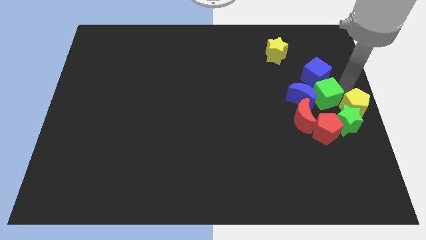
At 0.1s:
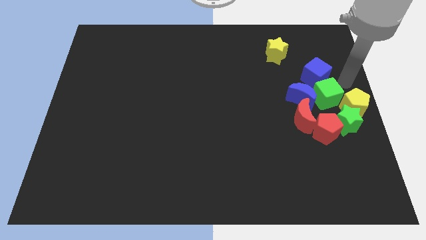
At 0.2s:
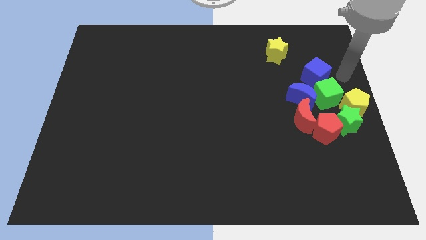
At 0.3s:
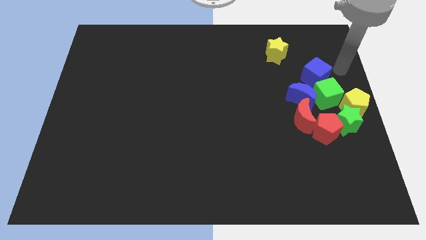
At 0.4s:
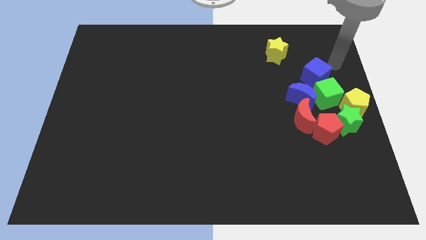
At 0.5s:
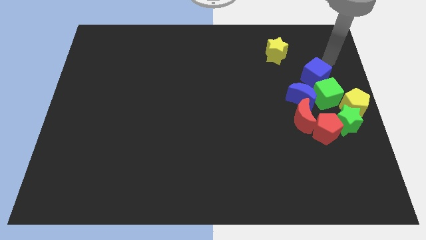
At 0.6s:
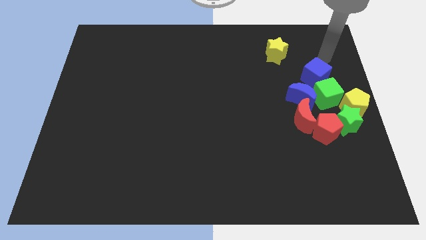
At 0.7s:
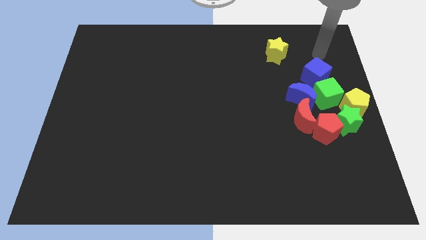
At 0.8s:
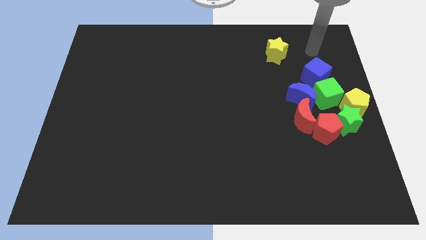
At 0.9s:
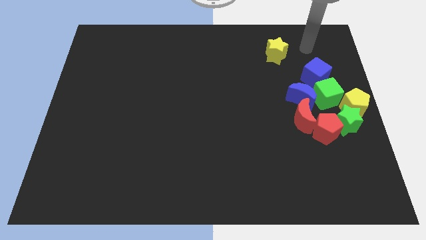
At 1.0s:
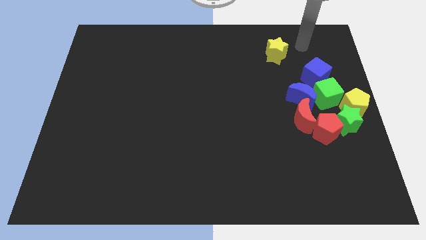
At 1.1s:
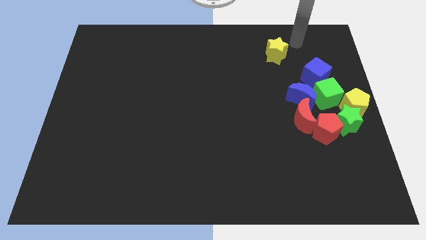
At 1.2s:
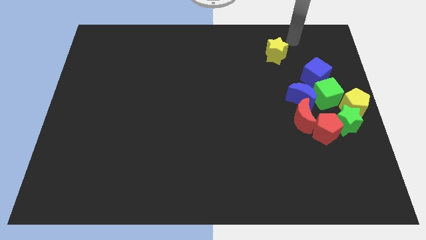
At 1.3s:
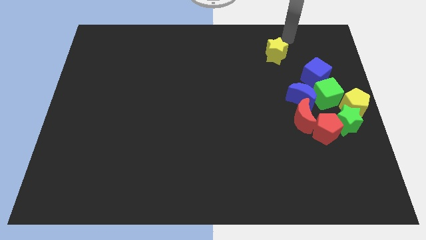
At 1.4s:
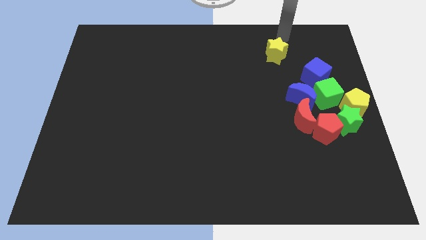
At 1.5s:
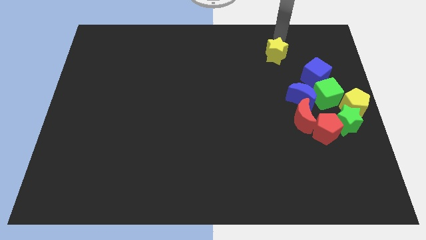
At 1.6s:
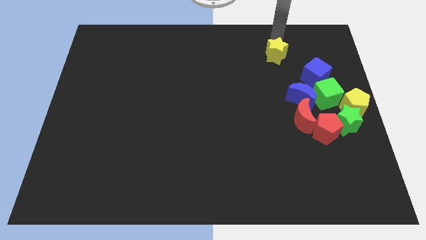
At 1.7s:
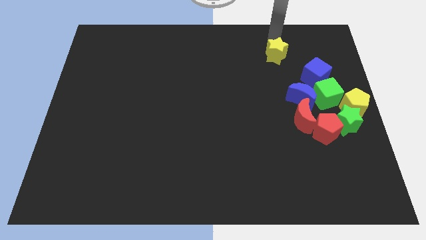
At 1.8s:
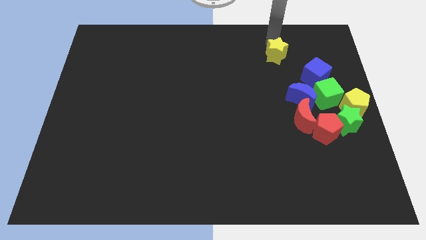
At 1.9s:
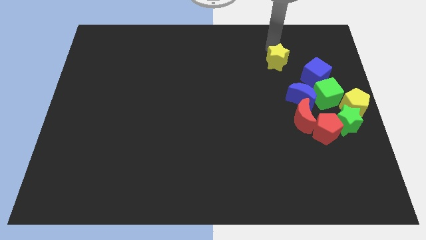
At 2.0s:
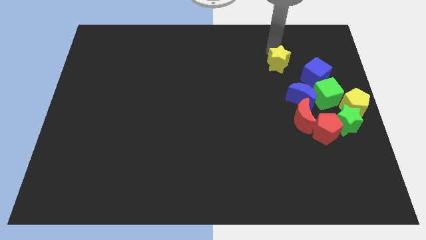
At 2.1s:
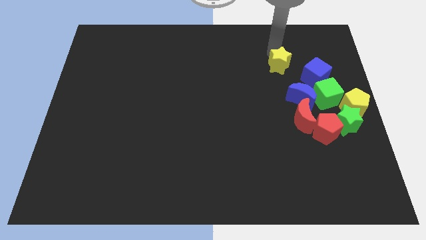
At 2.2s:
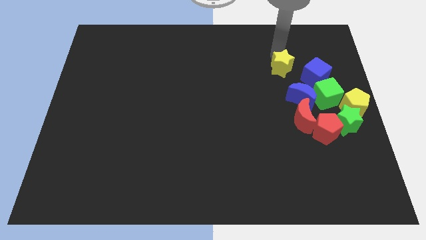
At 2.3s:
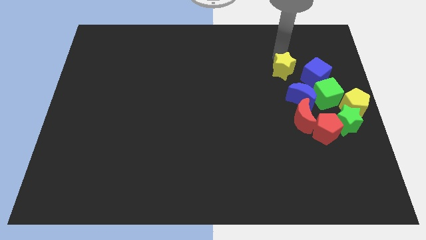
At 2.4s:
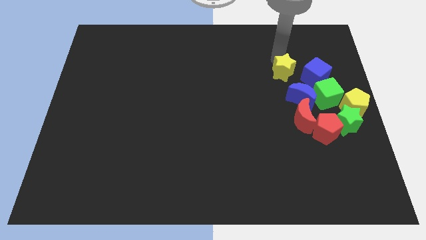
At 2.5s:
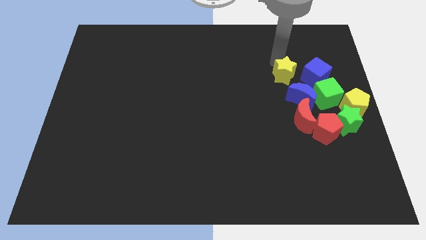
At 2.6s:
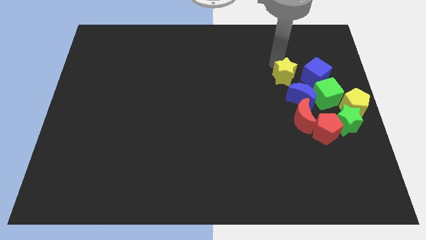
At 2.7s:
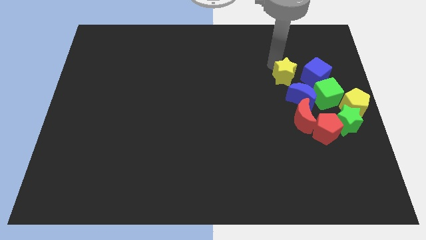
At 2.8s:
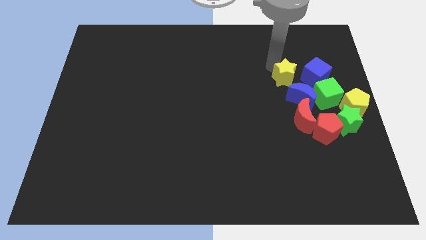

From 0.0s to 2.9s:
place the yellow star left to the blue cube

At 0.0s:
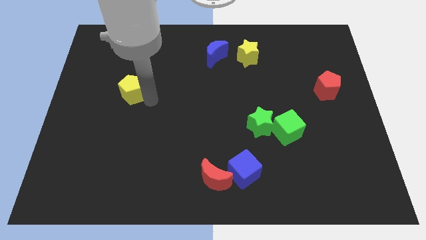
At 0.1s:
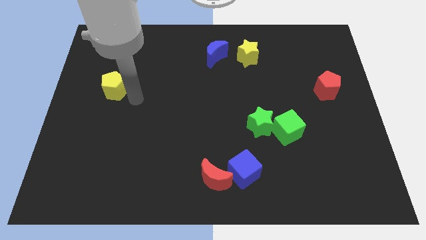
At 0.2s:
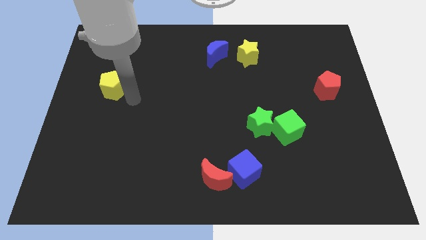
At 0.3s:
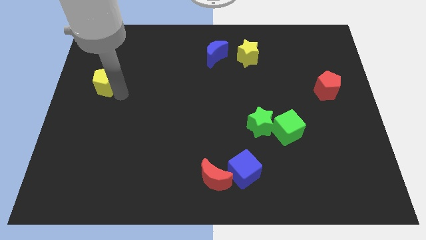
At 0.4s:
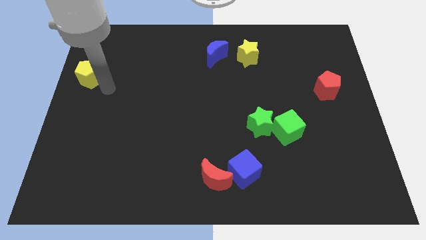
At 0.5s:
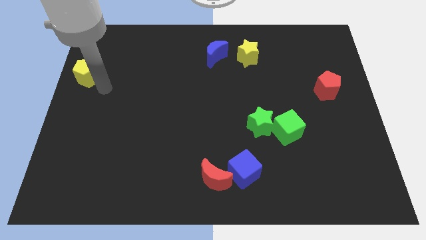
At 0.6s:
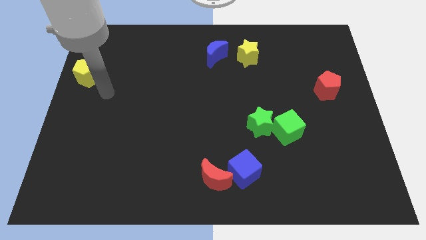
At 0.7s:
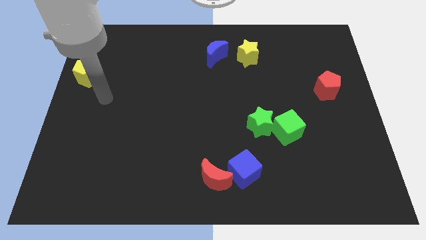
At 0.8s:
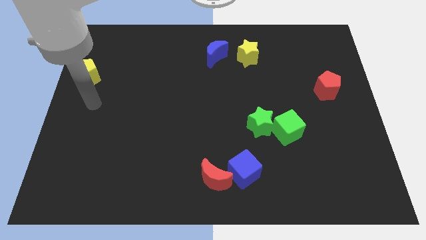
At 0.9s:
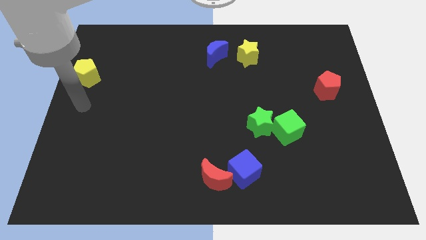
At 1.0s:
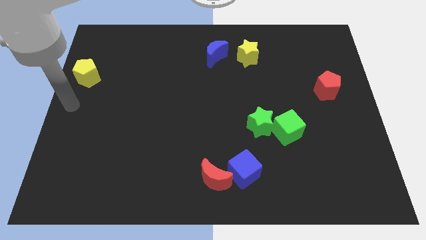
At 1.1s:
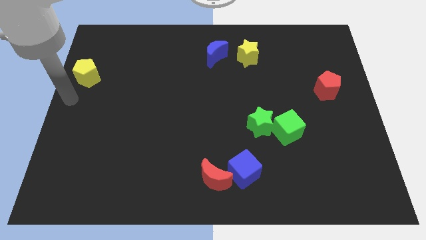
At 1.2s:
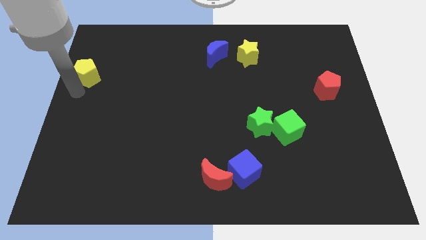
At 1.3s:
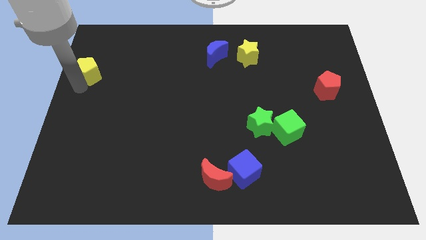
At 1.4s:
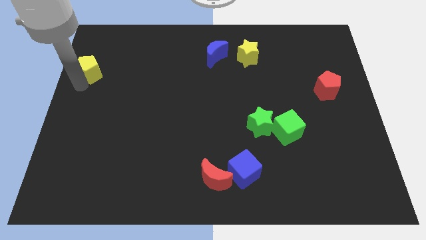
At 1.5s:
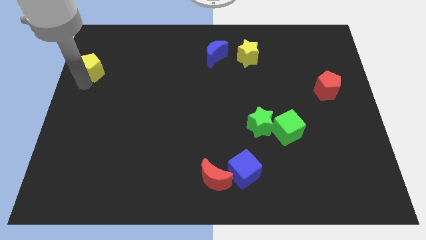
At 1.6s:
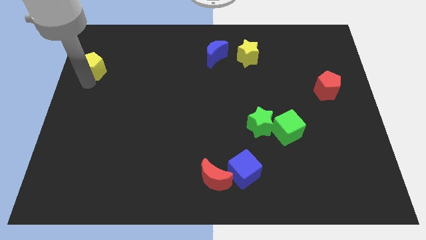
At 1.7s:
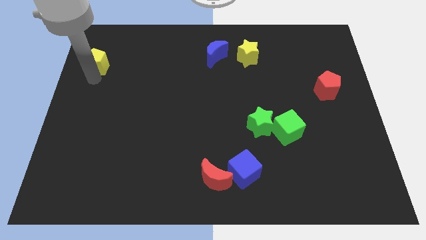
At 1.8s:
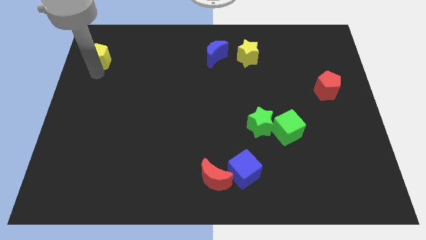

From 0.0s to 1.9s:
move the yellow pentagon to the left of the blue crescent

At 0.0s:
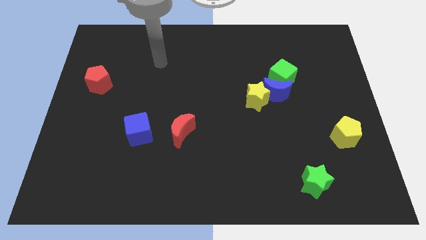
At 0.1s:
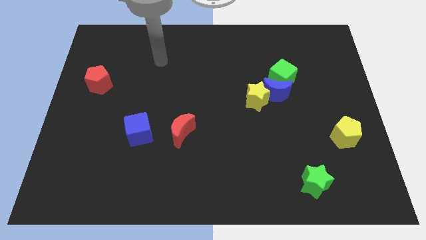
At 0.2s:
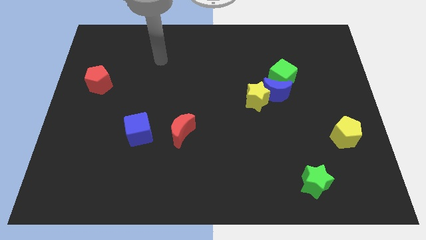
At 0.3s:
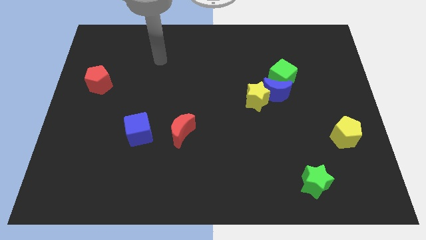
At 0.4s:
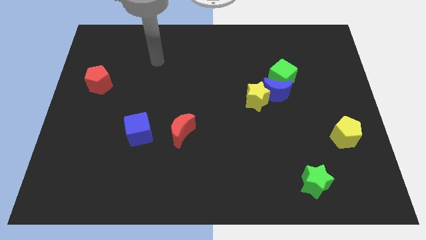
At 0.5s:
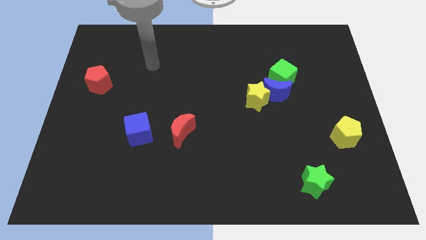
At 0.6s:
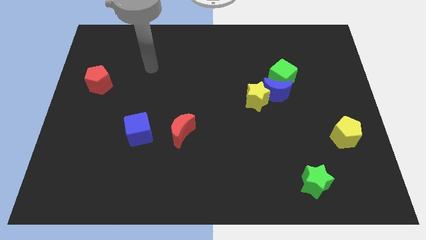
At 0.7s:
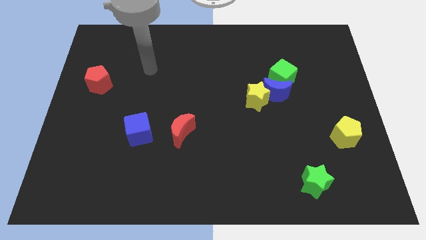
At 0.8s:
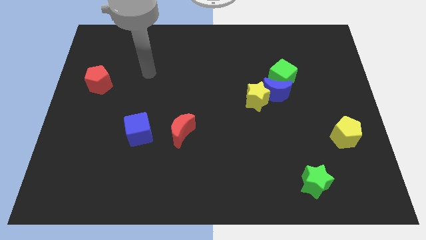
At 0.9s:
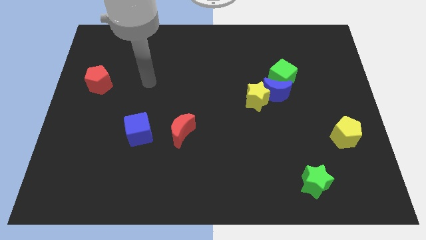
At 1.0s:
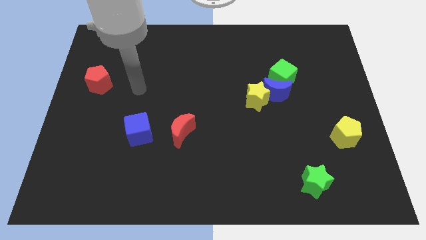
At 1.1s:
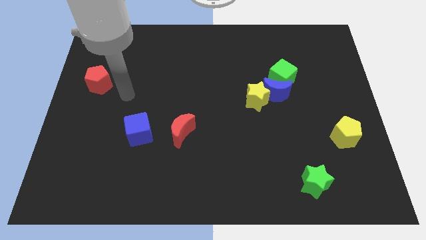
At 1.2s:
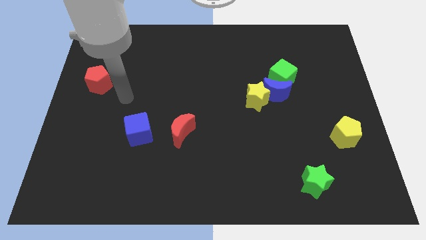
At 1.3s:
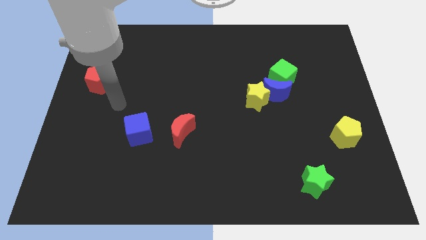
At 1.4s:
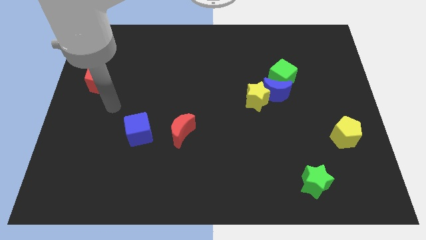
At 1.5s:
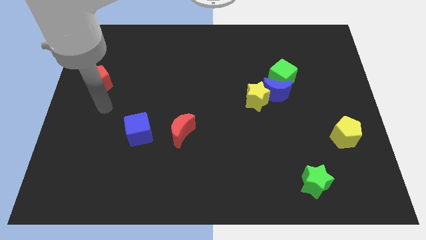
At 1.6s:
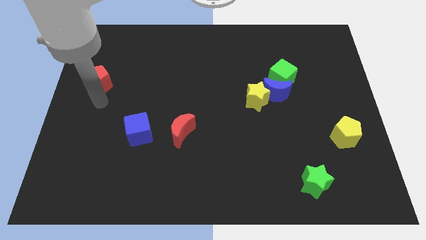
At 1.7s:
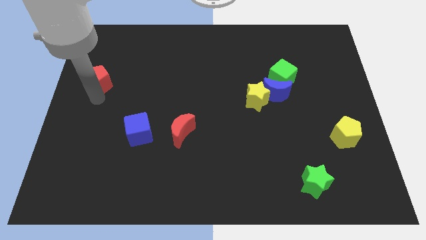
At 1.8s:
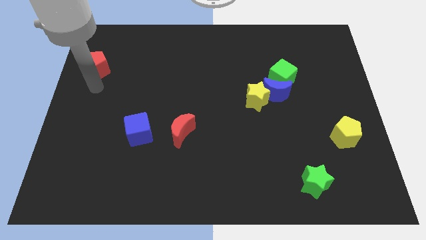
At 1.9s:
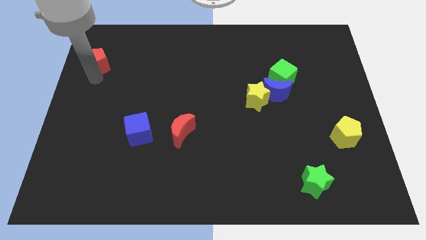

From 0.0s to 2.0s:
tap the red pentagon

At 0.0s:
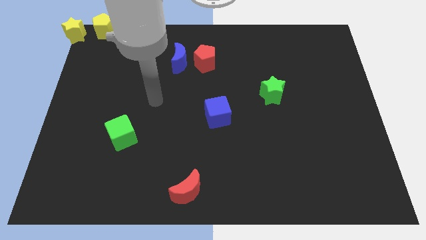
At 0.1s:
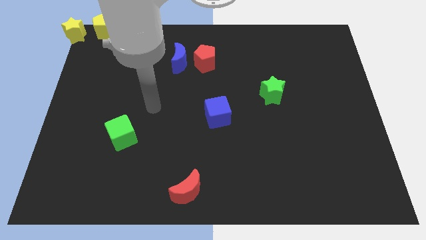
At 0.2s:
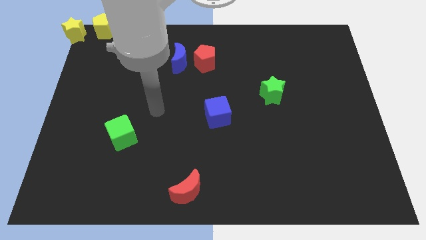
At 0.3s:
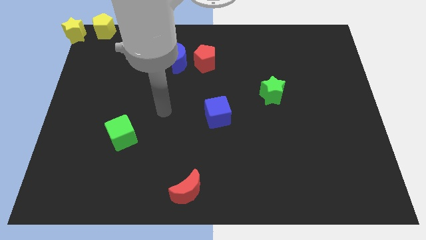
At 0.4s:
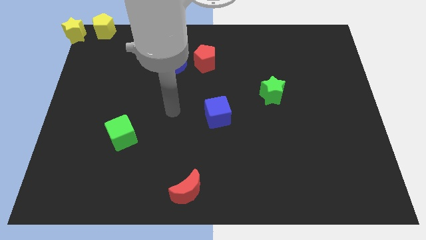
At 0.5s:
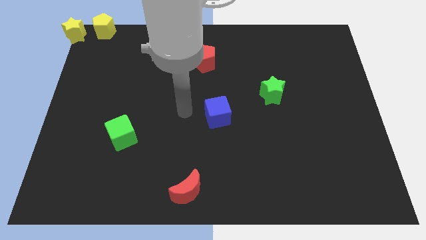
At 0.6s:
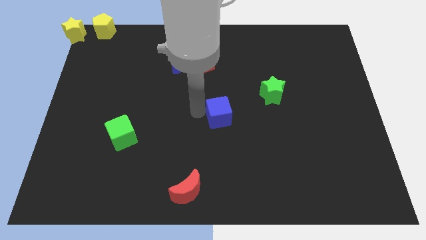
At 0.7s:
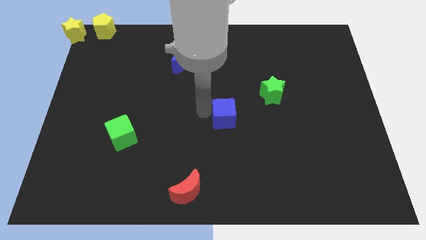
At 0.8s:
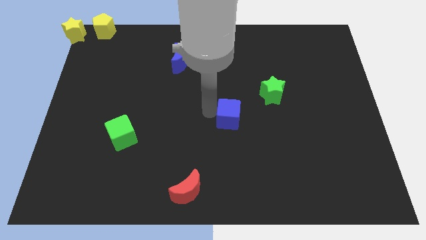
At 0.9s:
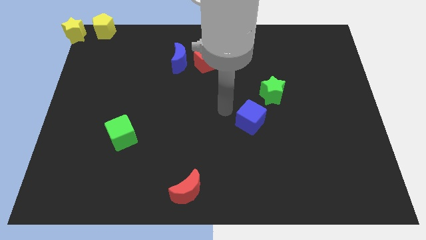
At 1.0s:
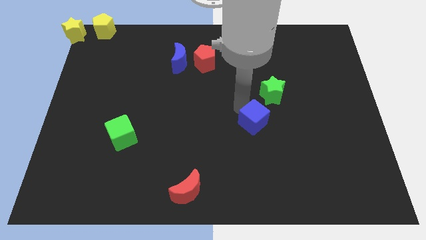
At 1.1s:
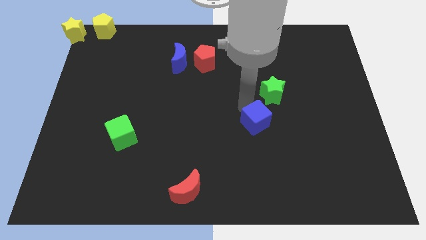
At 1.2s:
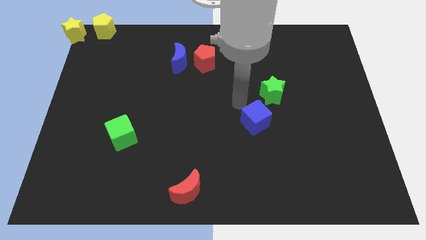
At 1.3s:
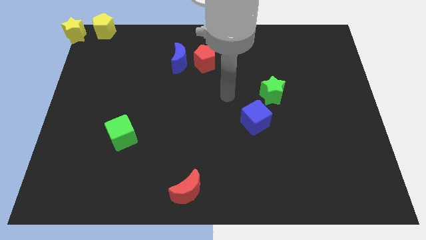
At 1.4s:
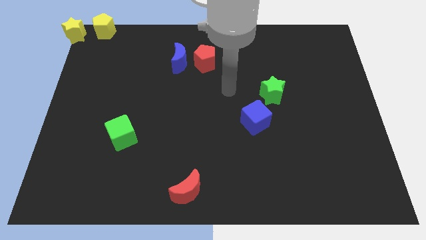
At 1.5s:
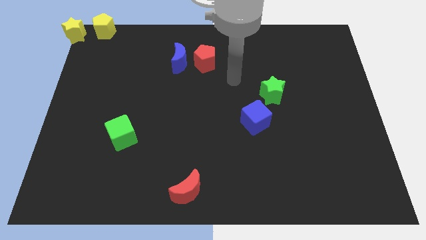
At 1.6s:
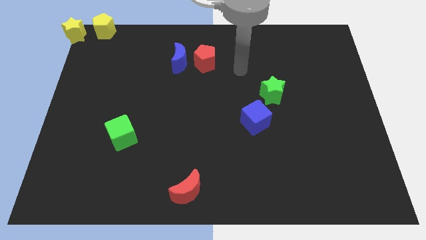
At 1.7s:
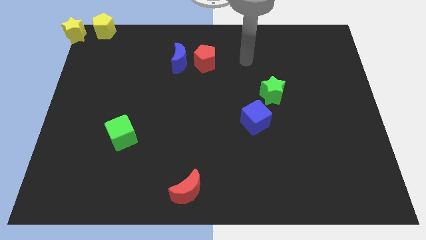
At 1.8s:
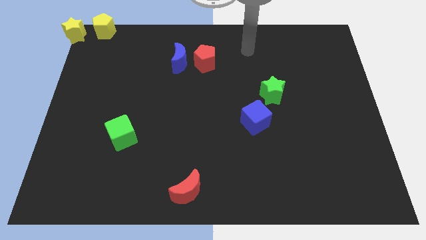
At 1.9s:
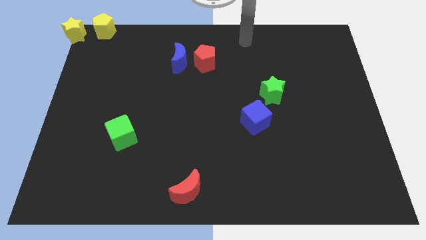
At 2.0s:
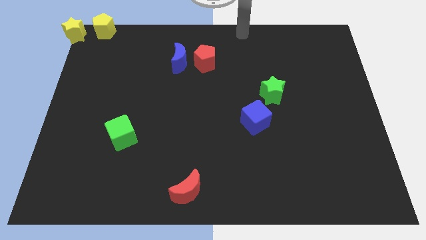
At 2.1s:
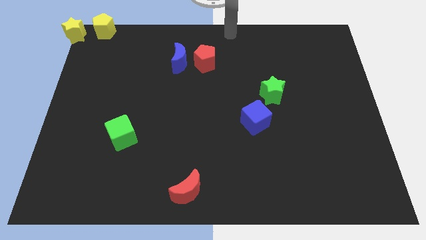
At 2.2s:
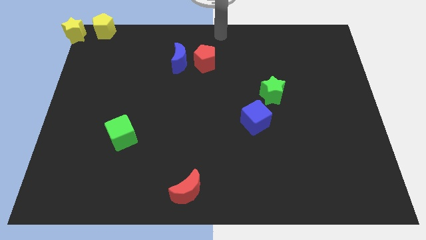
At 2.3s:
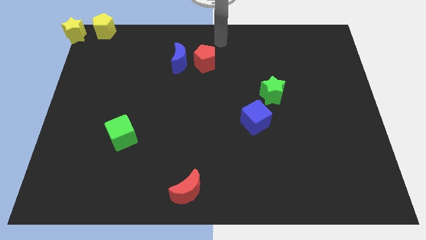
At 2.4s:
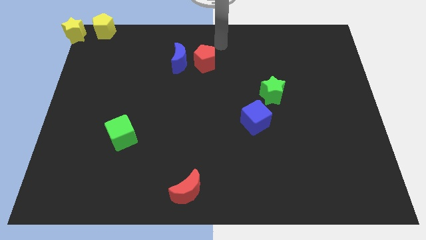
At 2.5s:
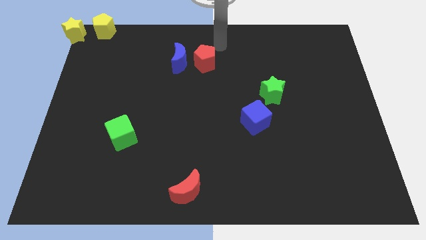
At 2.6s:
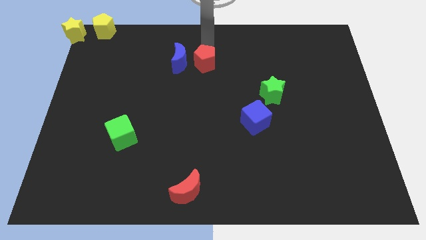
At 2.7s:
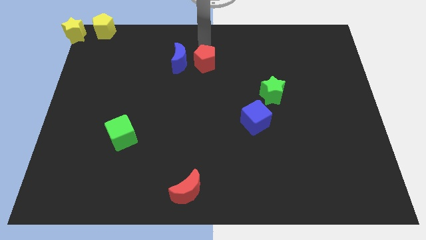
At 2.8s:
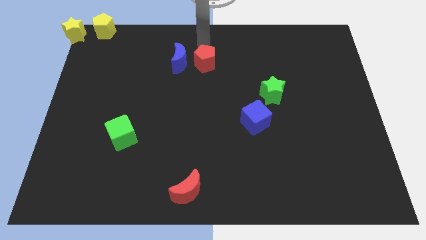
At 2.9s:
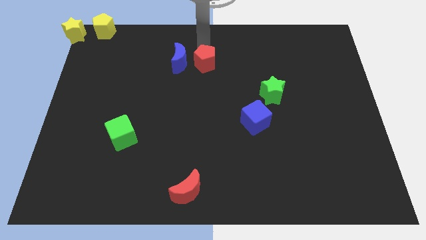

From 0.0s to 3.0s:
move blue cube bottom left to the green star
